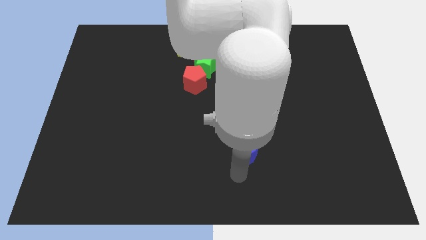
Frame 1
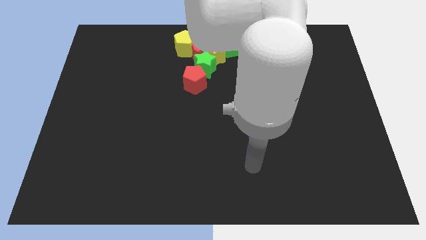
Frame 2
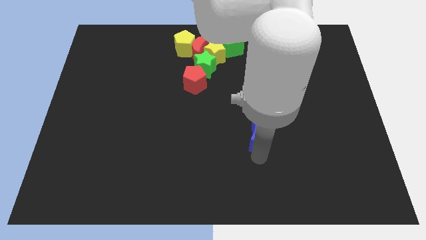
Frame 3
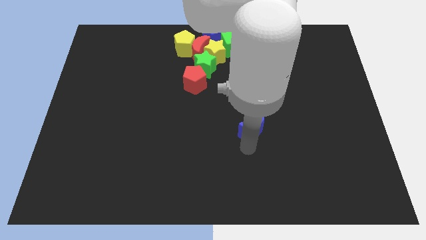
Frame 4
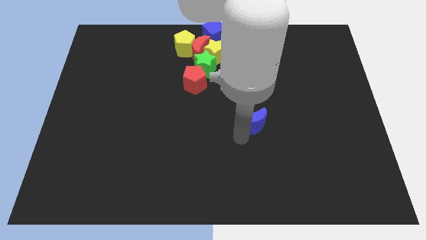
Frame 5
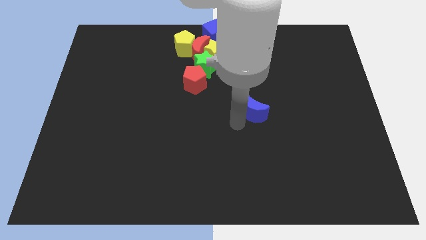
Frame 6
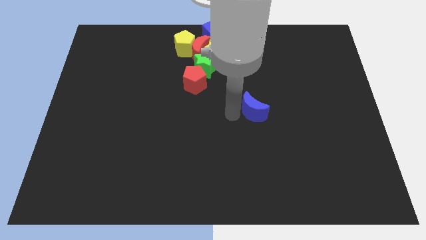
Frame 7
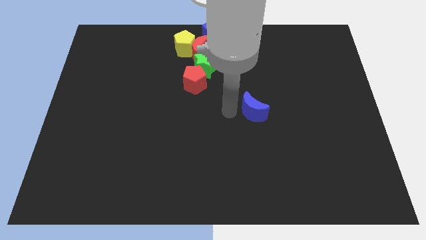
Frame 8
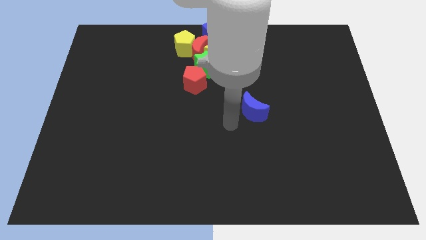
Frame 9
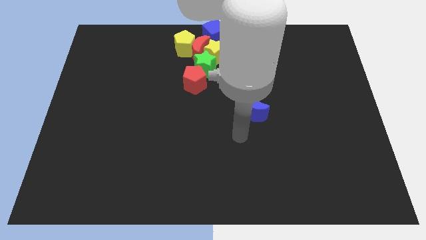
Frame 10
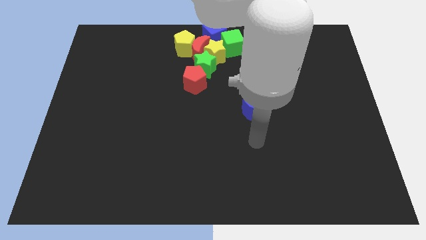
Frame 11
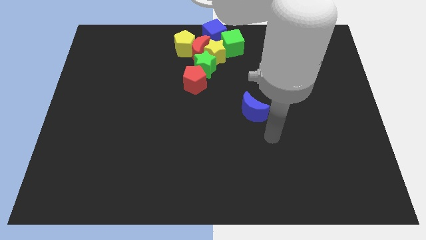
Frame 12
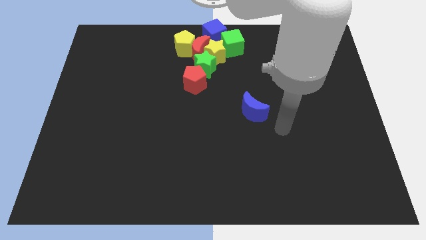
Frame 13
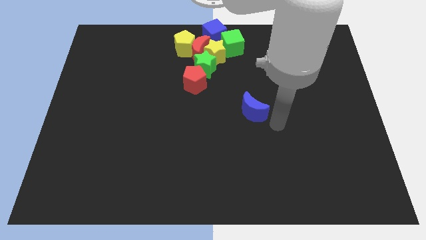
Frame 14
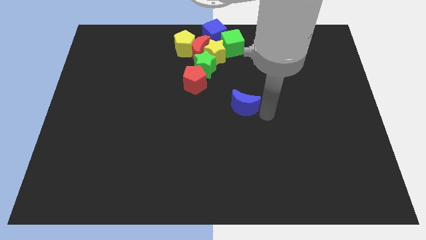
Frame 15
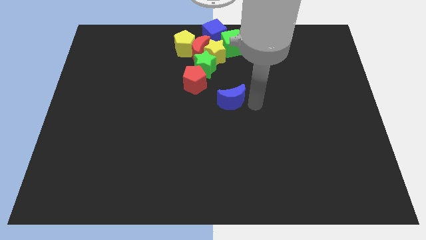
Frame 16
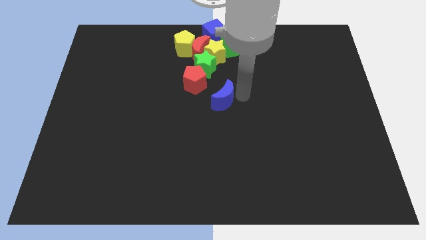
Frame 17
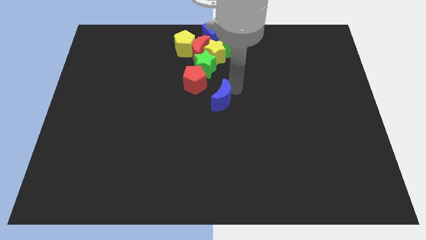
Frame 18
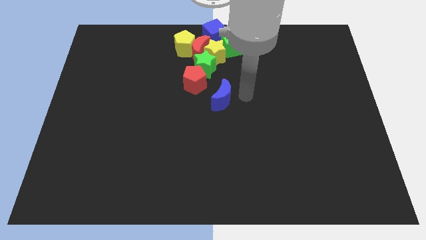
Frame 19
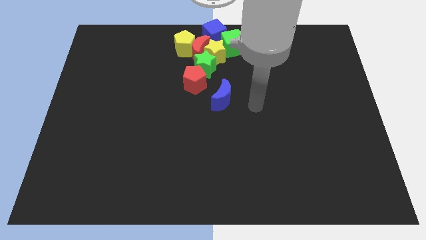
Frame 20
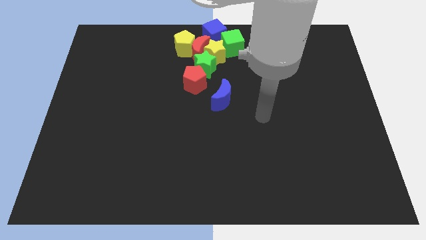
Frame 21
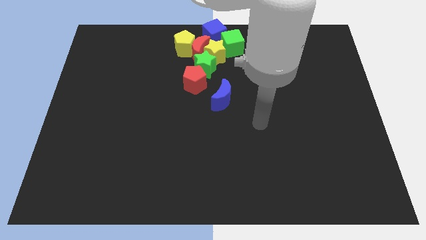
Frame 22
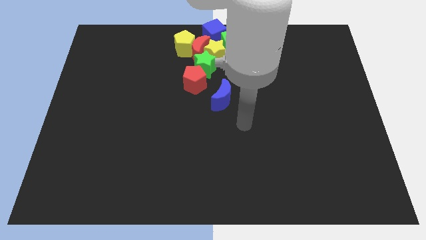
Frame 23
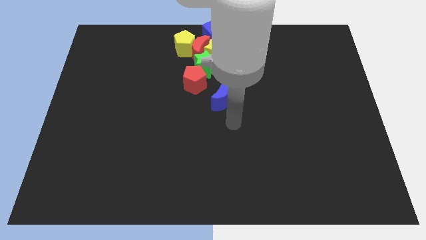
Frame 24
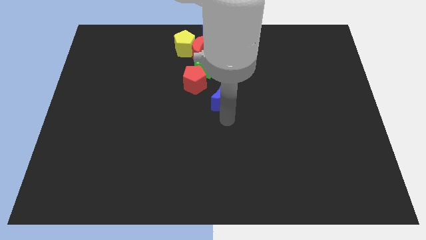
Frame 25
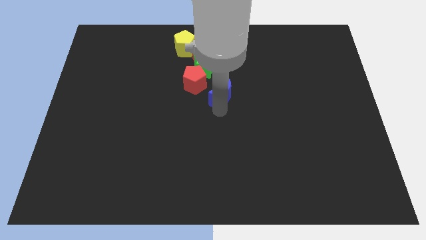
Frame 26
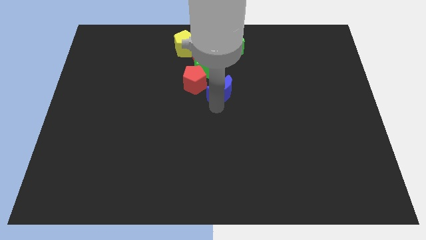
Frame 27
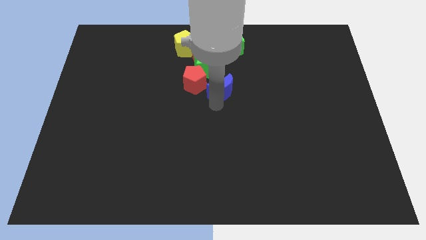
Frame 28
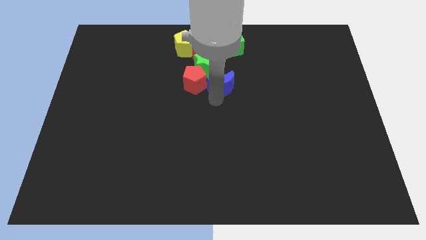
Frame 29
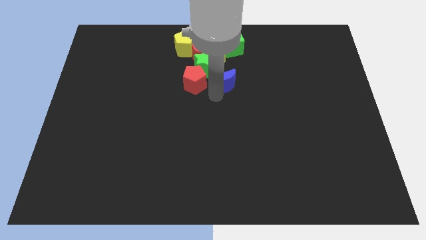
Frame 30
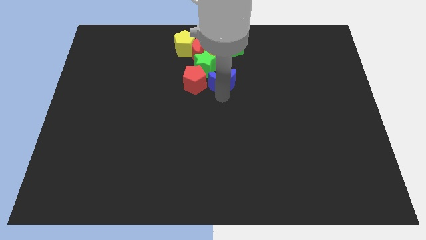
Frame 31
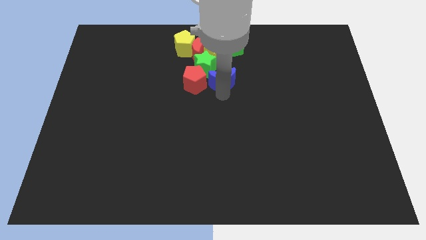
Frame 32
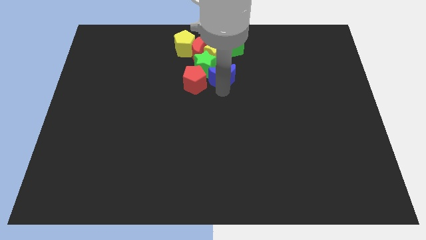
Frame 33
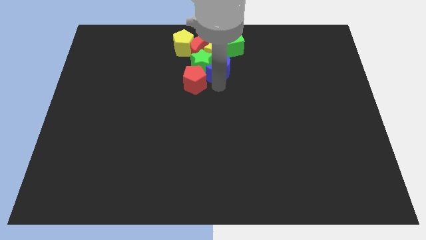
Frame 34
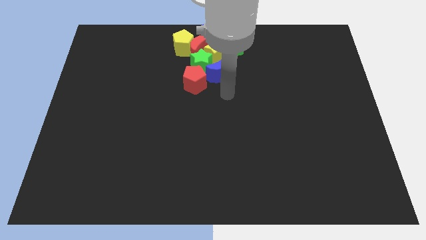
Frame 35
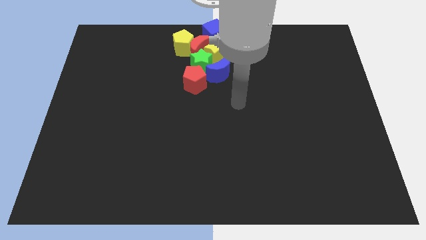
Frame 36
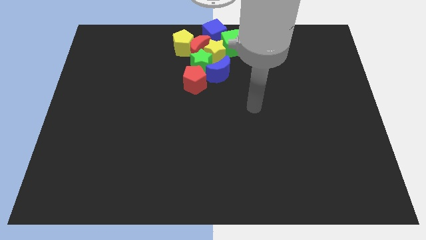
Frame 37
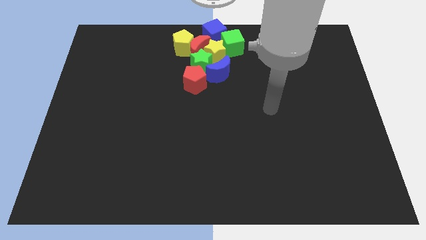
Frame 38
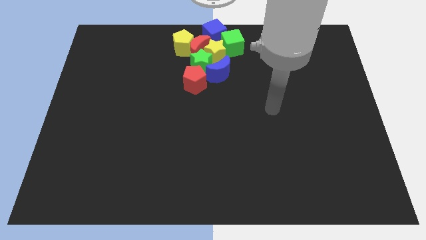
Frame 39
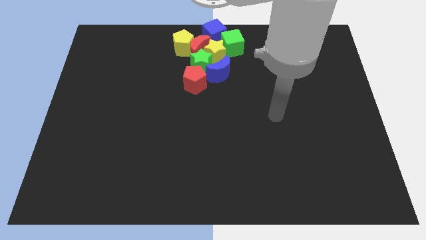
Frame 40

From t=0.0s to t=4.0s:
place the blue crescent towards the bottom right side of the green star

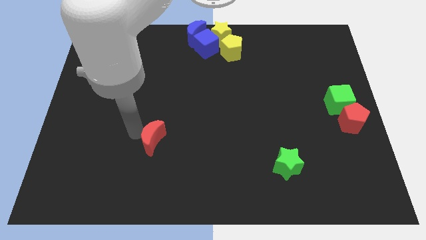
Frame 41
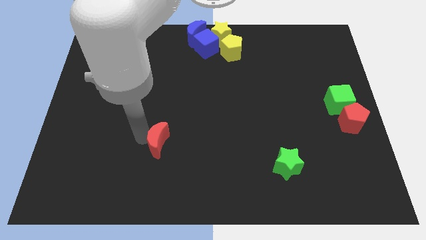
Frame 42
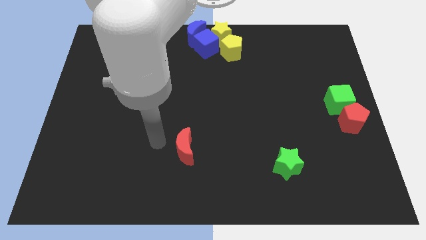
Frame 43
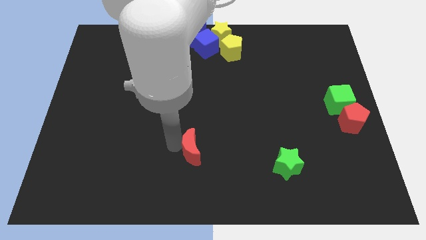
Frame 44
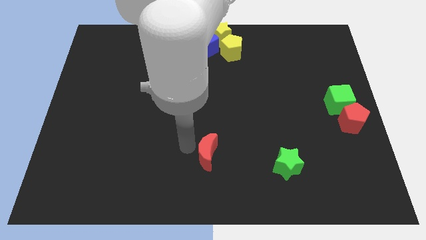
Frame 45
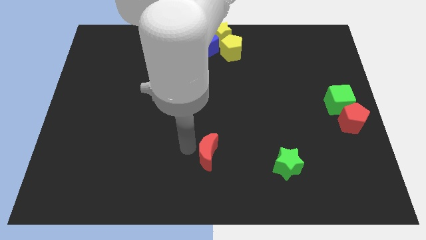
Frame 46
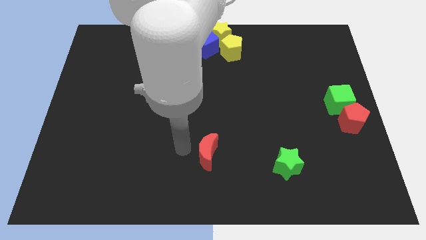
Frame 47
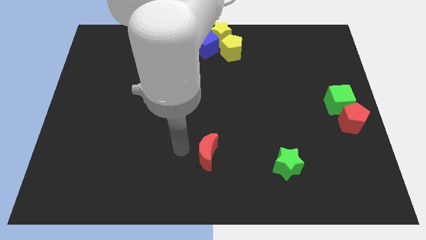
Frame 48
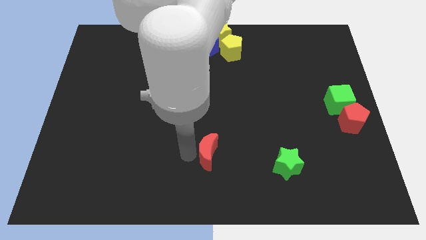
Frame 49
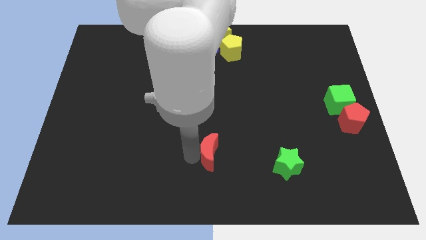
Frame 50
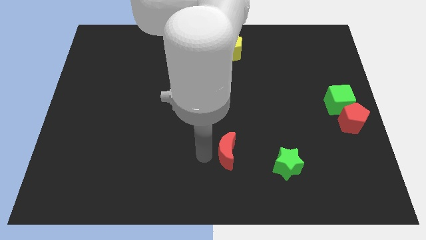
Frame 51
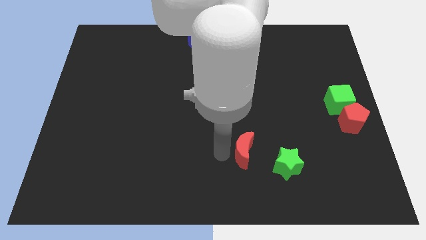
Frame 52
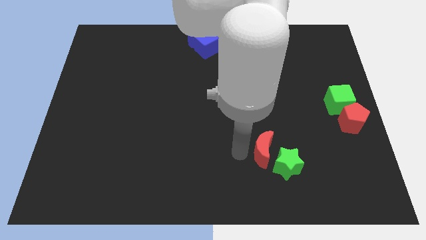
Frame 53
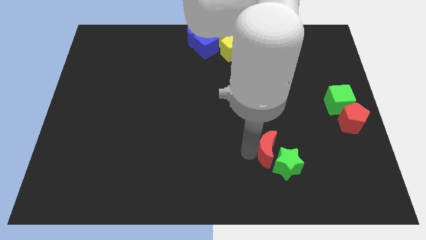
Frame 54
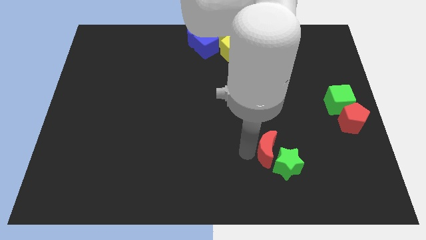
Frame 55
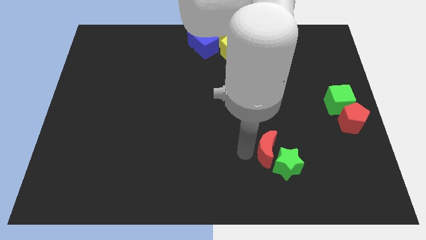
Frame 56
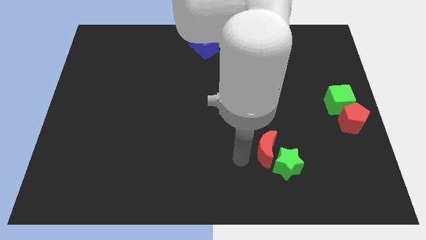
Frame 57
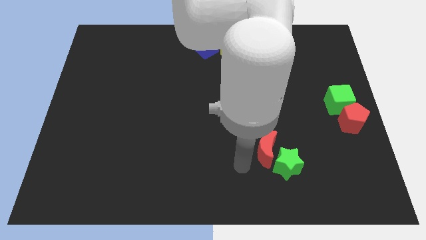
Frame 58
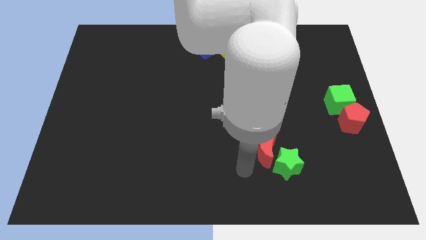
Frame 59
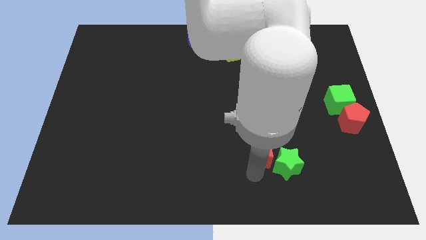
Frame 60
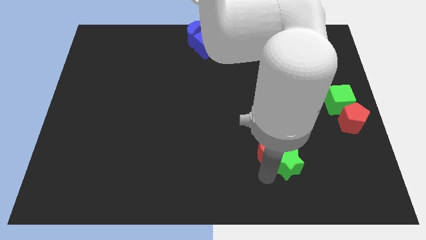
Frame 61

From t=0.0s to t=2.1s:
place red crescent above the green star

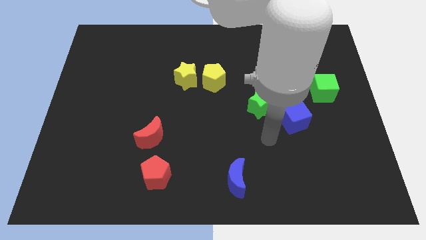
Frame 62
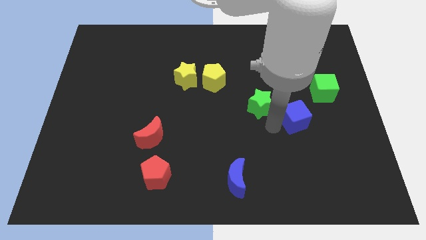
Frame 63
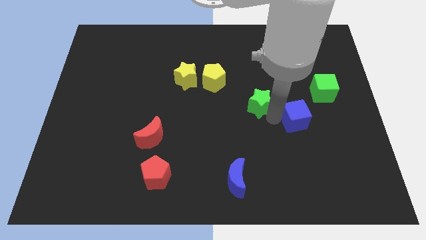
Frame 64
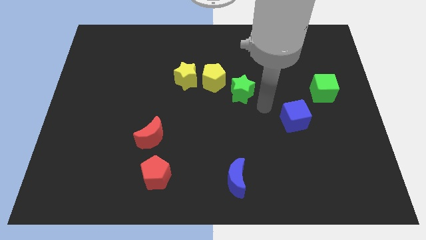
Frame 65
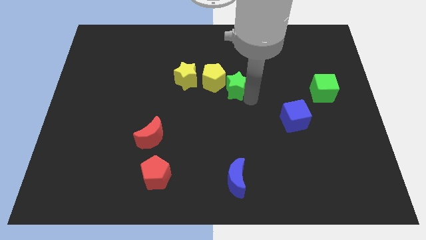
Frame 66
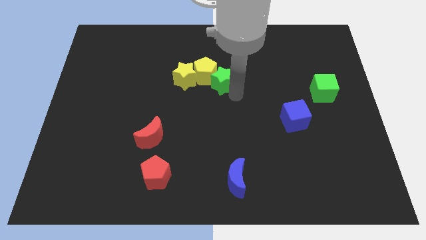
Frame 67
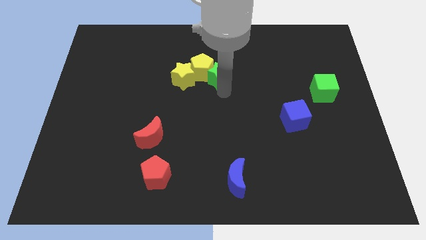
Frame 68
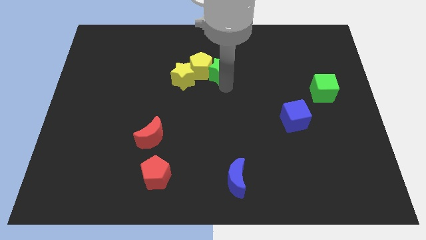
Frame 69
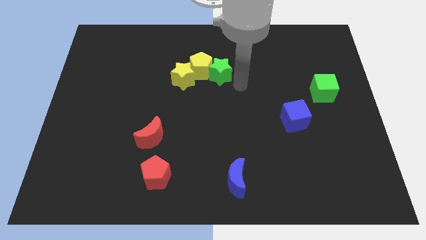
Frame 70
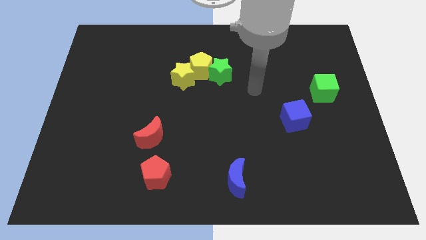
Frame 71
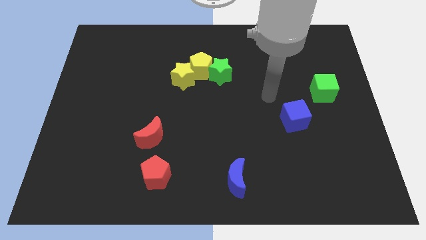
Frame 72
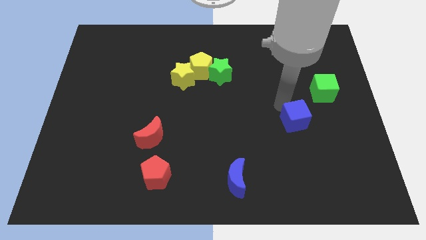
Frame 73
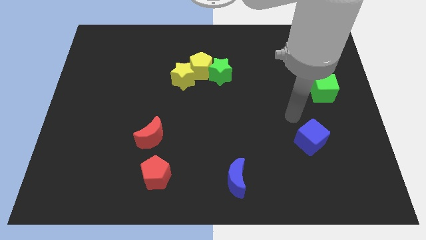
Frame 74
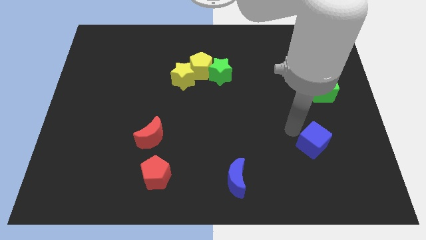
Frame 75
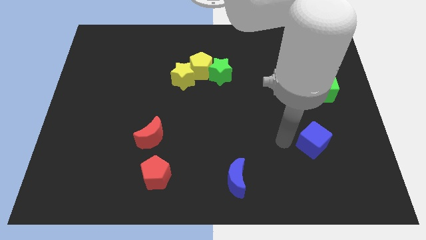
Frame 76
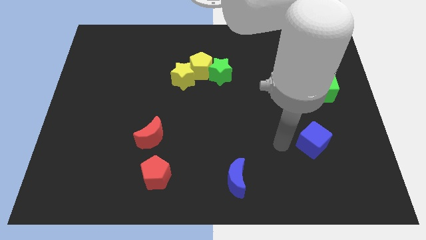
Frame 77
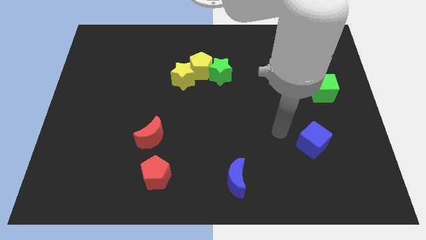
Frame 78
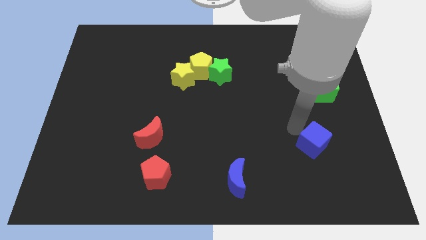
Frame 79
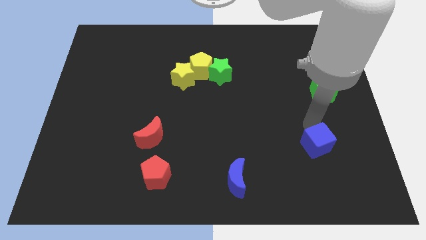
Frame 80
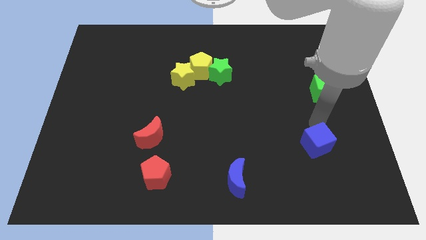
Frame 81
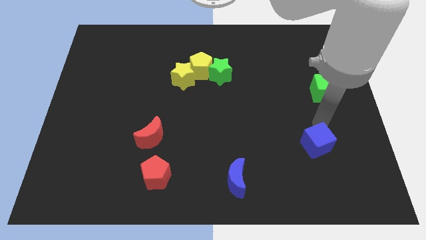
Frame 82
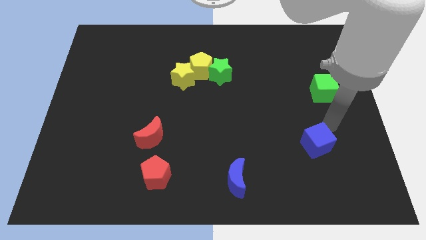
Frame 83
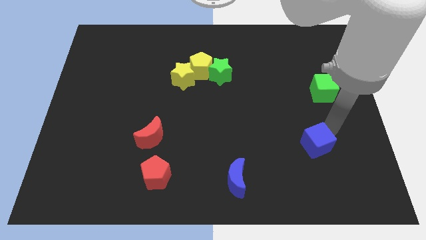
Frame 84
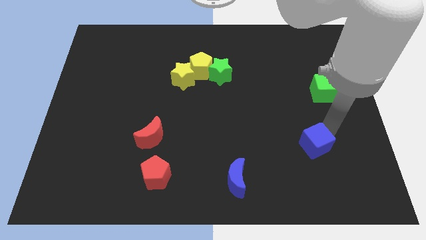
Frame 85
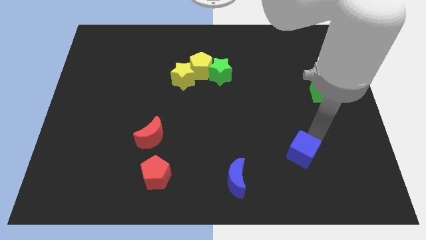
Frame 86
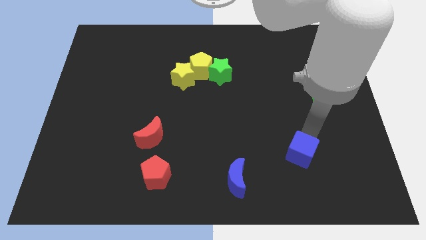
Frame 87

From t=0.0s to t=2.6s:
drag the green star close to the yellow pentagon

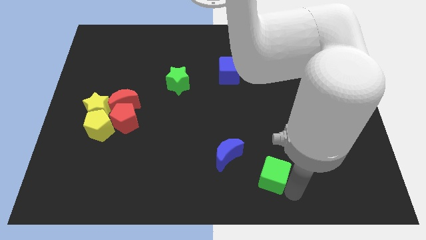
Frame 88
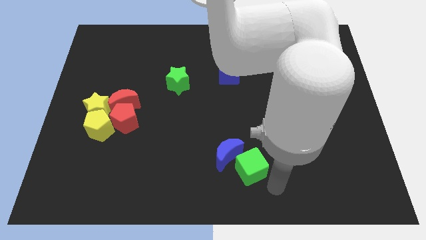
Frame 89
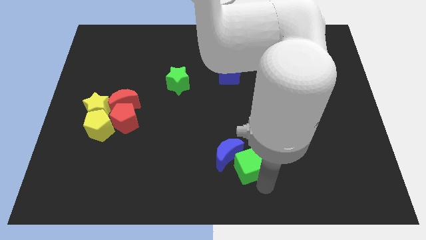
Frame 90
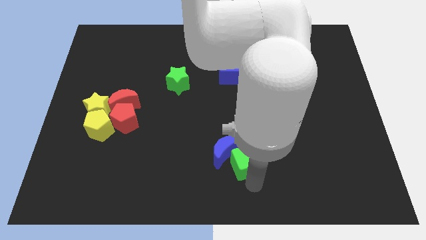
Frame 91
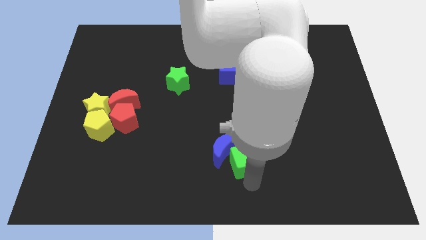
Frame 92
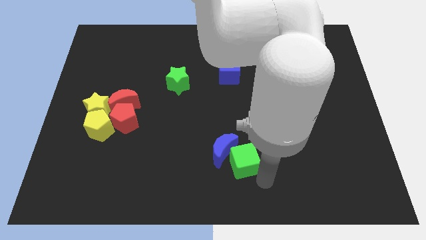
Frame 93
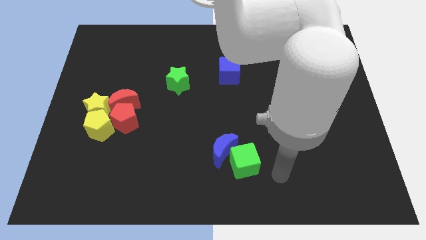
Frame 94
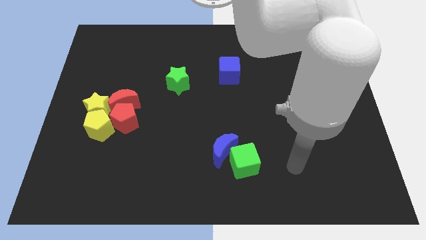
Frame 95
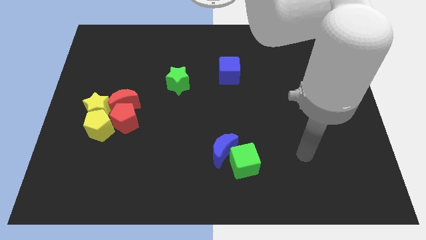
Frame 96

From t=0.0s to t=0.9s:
push the green cube into the blue moon
